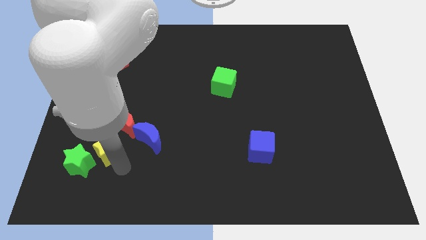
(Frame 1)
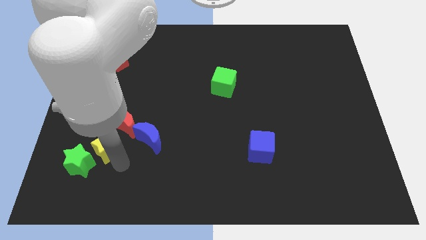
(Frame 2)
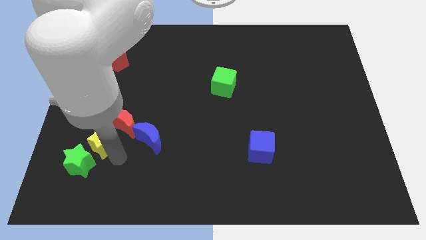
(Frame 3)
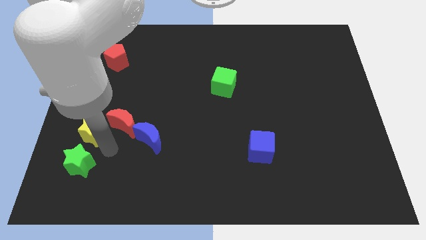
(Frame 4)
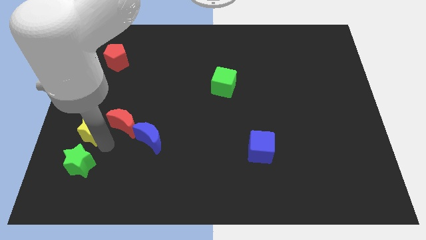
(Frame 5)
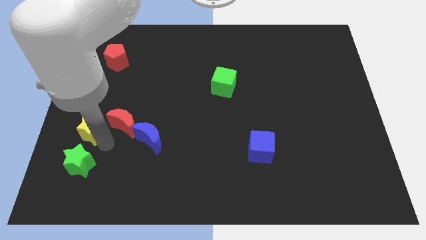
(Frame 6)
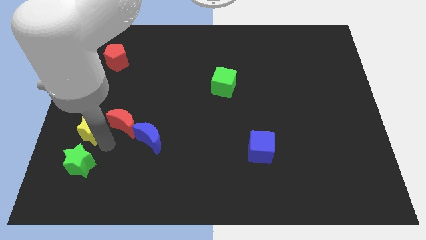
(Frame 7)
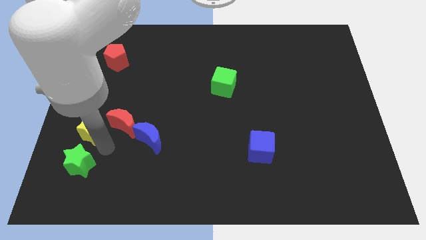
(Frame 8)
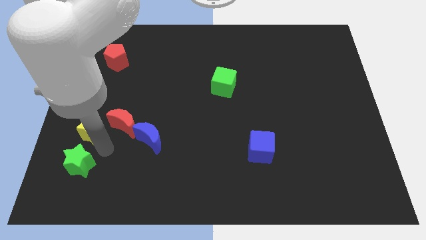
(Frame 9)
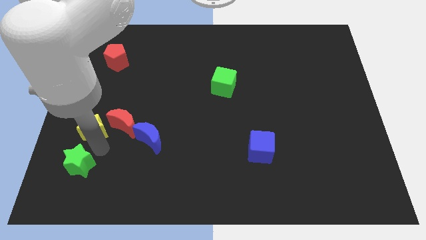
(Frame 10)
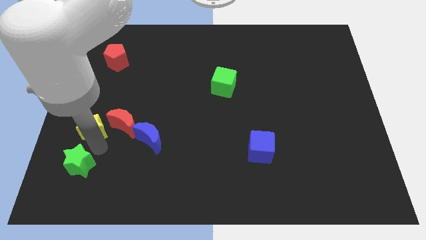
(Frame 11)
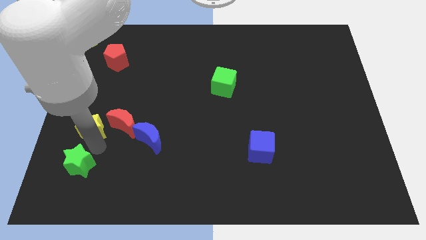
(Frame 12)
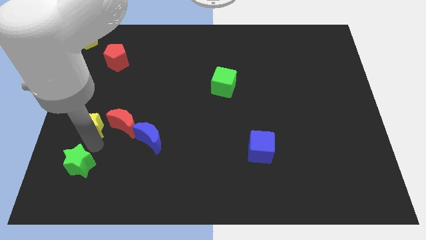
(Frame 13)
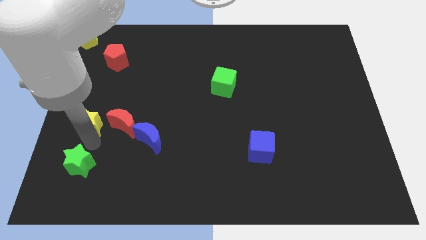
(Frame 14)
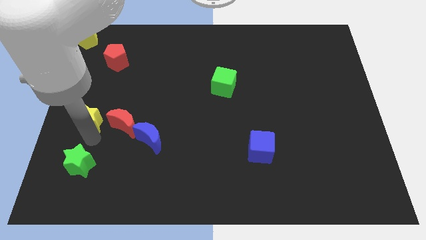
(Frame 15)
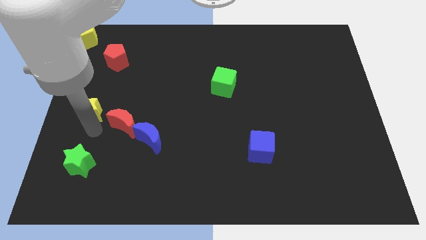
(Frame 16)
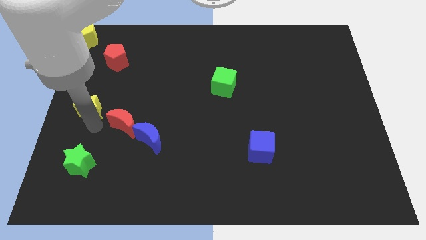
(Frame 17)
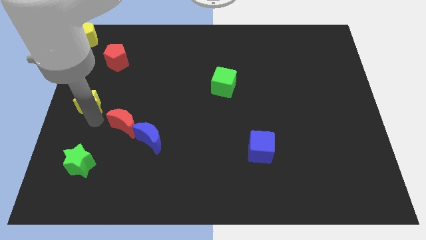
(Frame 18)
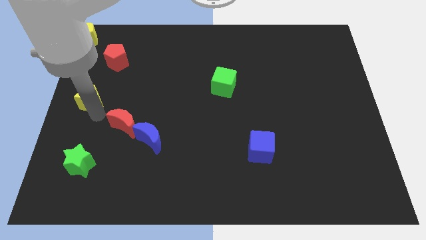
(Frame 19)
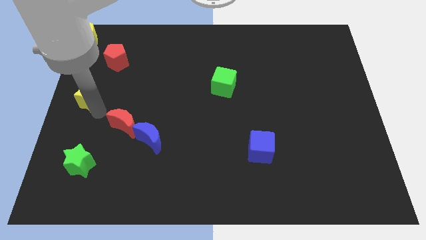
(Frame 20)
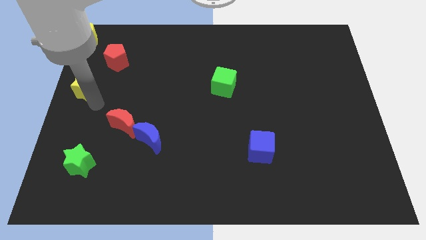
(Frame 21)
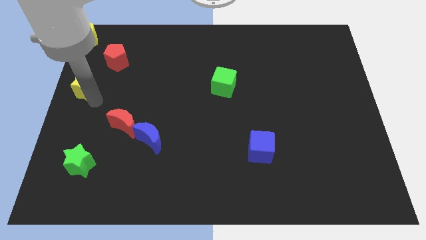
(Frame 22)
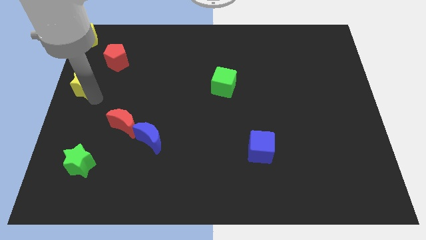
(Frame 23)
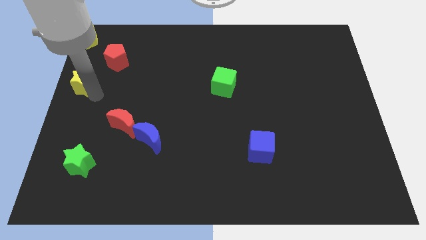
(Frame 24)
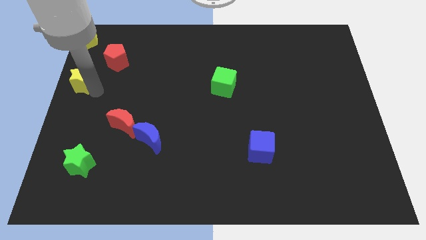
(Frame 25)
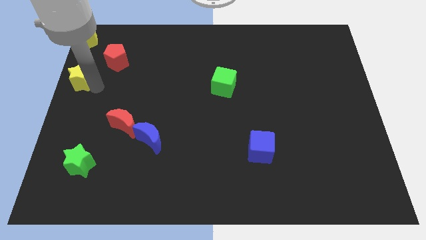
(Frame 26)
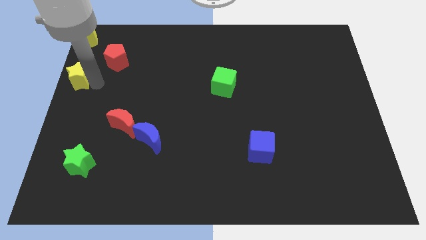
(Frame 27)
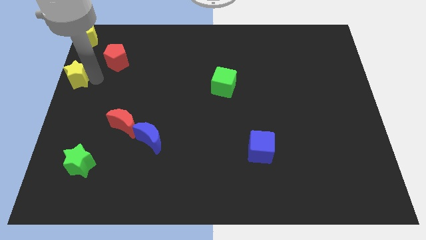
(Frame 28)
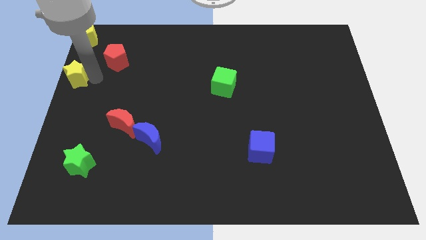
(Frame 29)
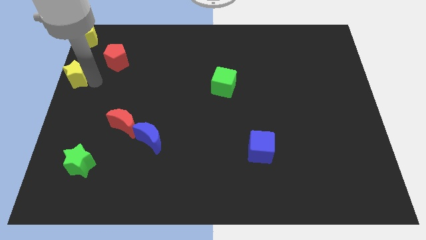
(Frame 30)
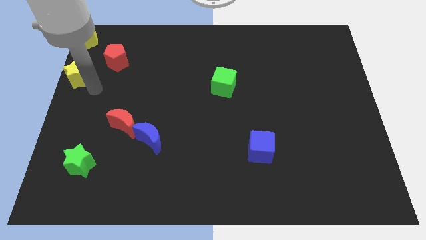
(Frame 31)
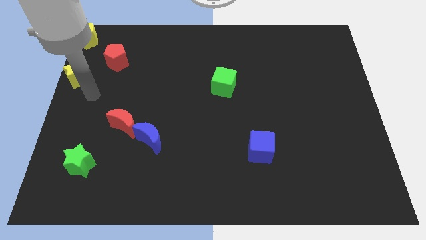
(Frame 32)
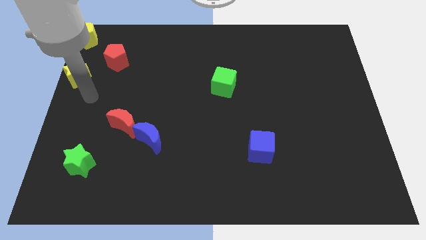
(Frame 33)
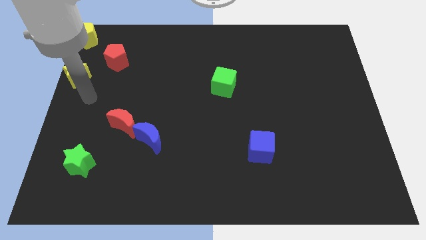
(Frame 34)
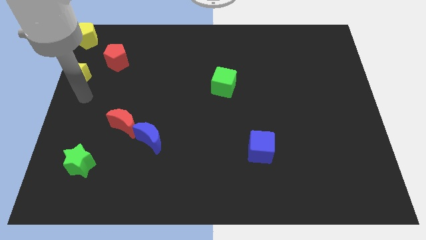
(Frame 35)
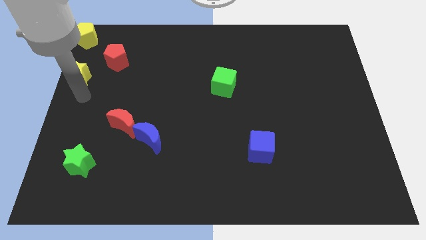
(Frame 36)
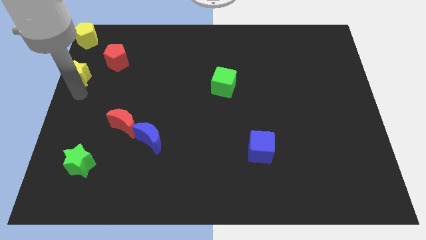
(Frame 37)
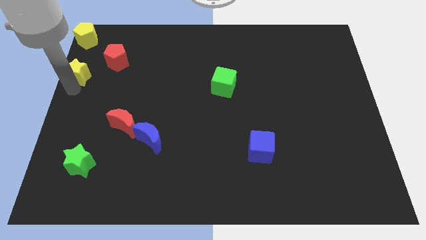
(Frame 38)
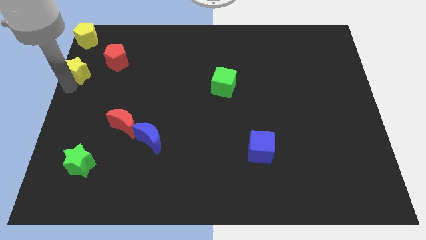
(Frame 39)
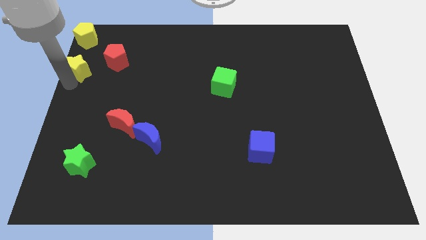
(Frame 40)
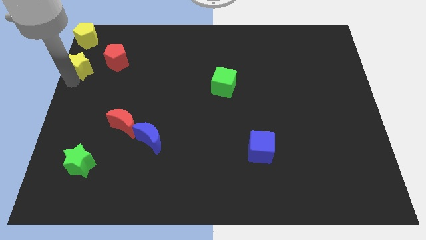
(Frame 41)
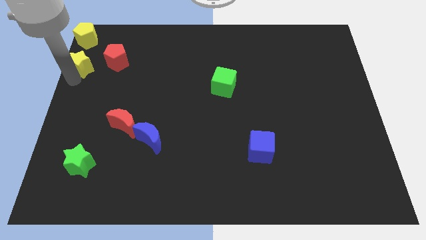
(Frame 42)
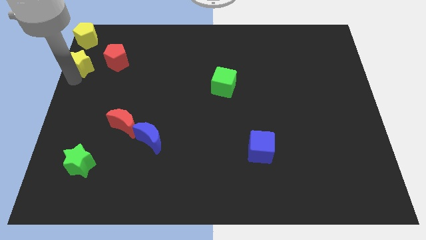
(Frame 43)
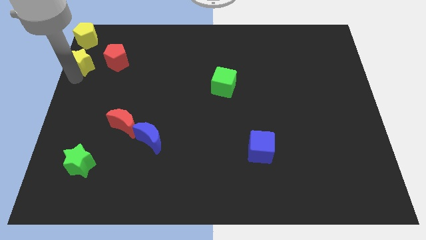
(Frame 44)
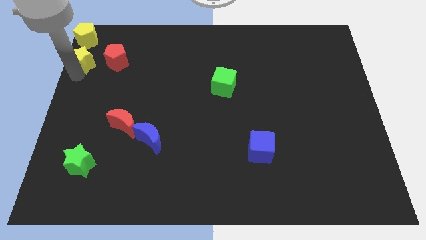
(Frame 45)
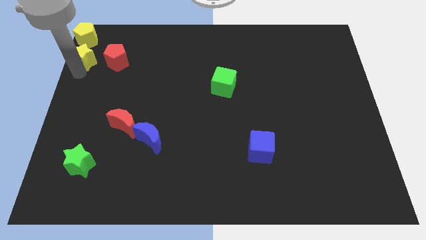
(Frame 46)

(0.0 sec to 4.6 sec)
put the yellow star to the left side of the red pentagon

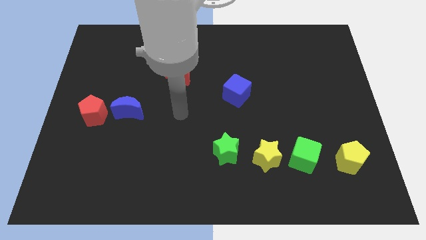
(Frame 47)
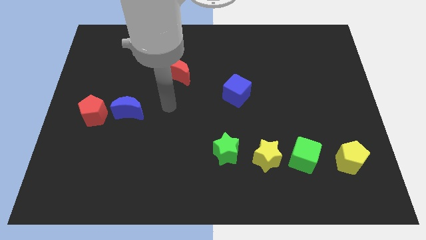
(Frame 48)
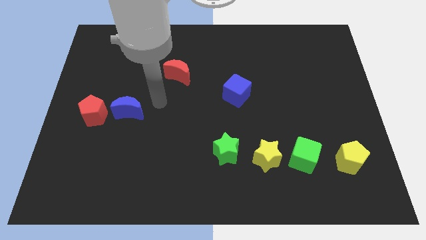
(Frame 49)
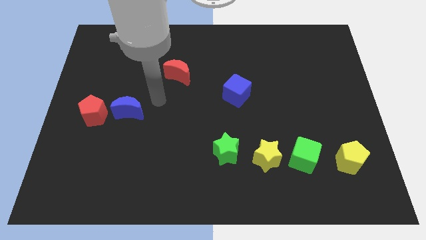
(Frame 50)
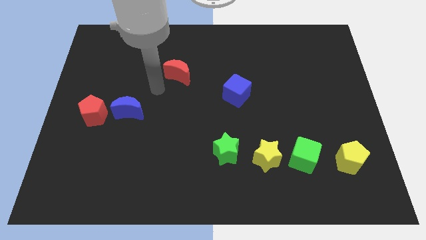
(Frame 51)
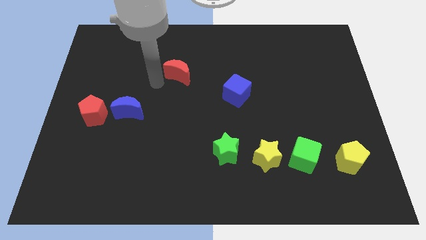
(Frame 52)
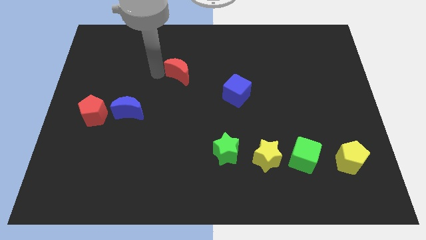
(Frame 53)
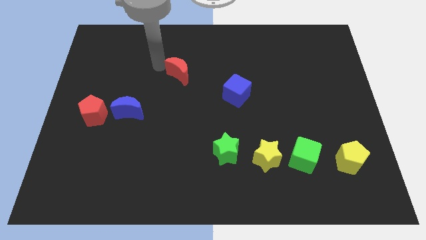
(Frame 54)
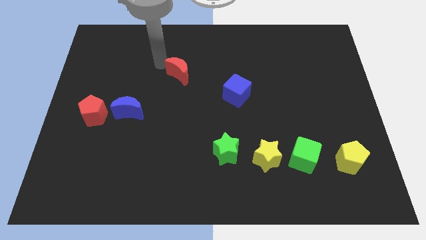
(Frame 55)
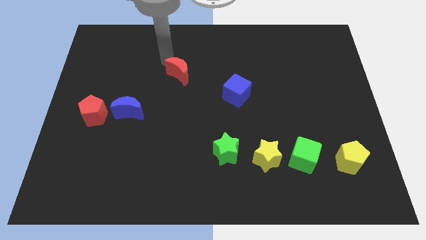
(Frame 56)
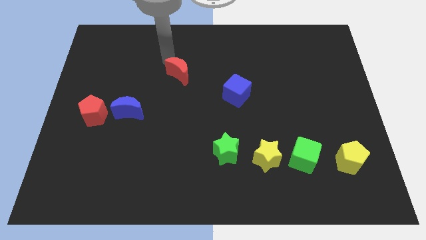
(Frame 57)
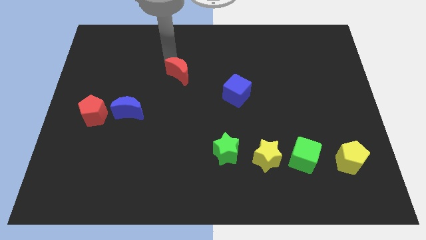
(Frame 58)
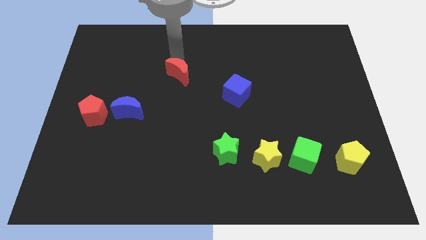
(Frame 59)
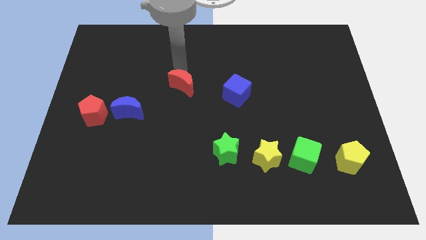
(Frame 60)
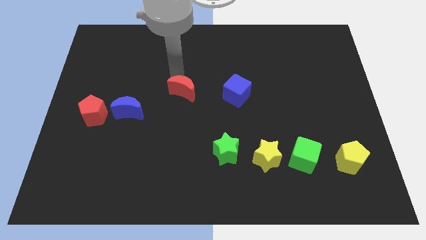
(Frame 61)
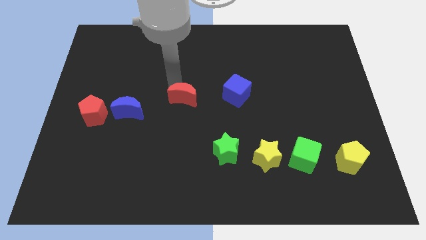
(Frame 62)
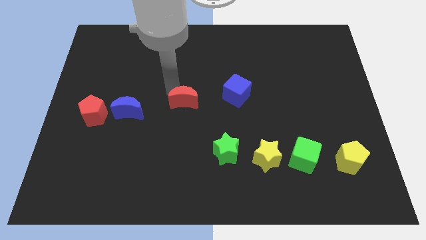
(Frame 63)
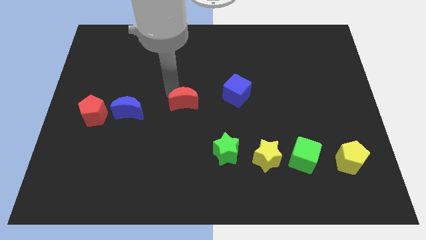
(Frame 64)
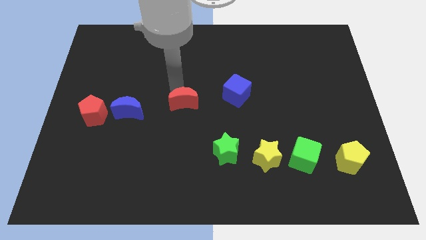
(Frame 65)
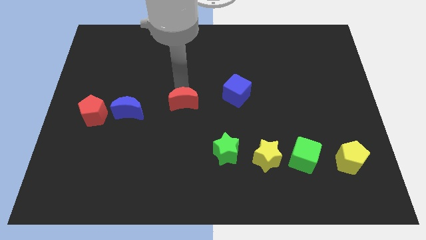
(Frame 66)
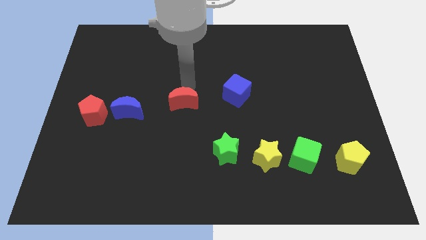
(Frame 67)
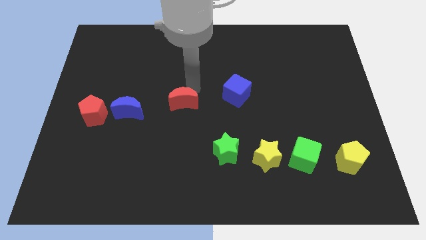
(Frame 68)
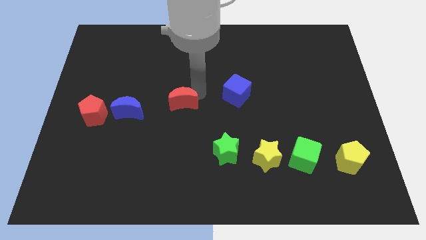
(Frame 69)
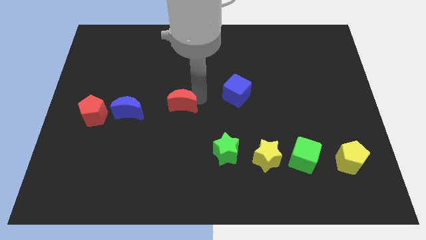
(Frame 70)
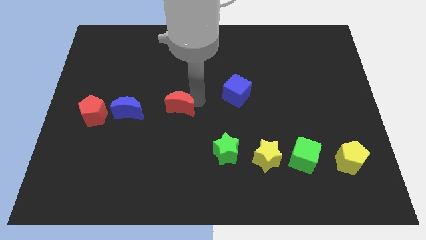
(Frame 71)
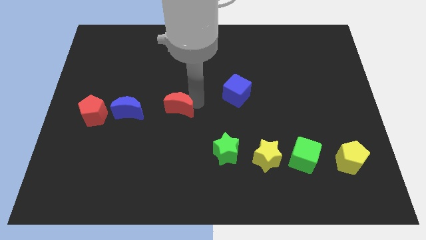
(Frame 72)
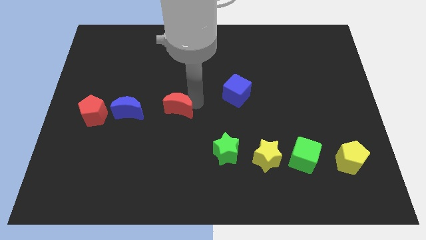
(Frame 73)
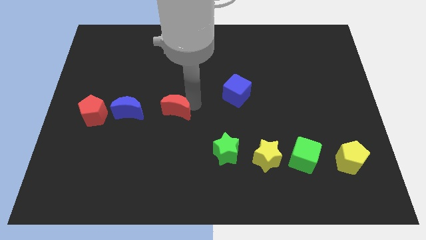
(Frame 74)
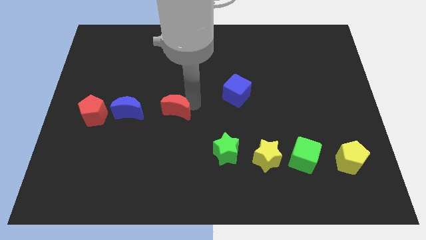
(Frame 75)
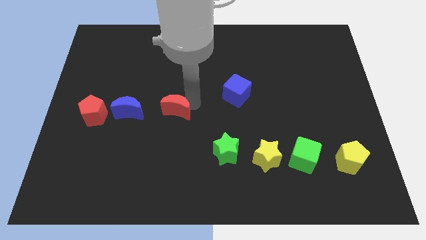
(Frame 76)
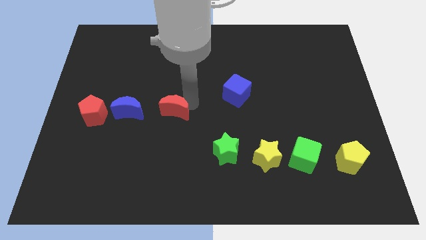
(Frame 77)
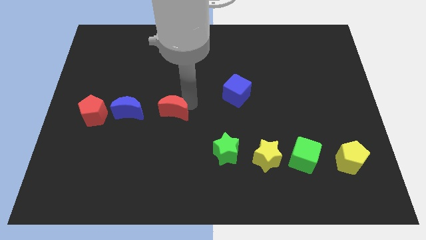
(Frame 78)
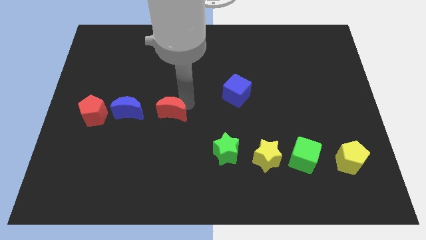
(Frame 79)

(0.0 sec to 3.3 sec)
push the red crescent horizontally to the right of the blue crescent

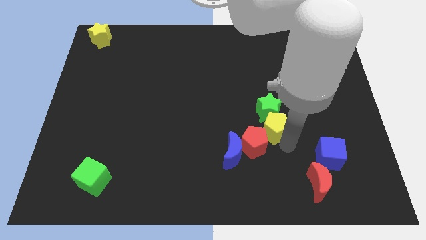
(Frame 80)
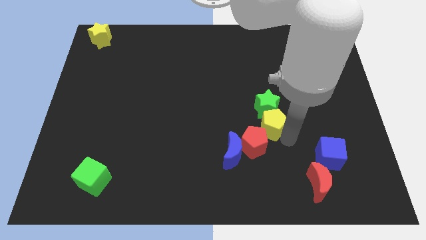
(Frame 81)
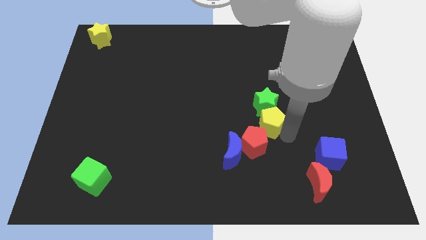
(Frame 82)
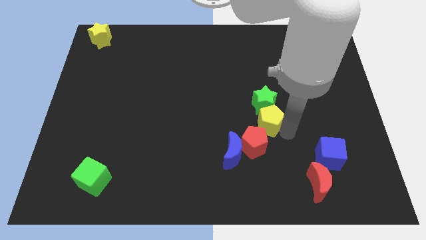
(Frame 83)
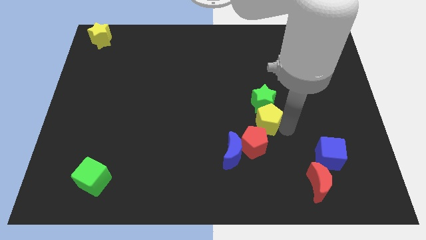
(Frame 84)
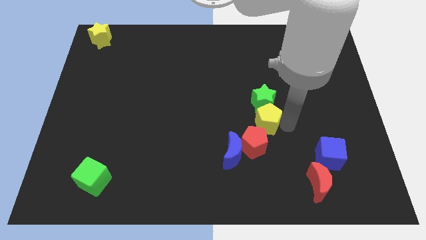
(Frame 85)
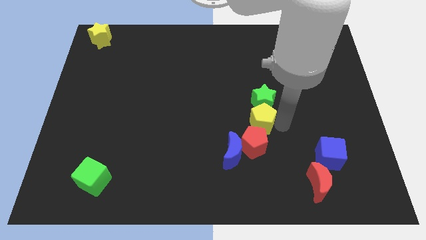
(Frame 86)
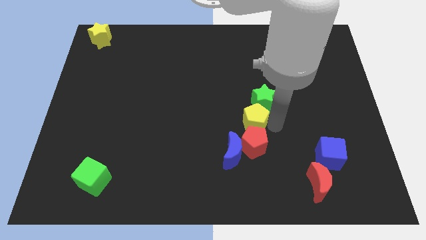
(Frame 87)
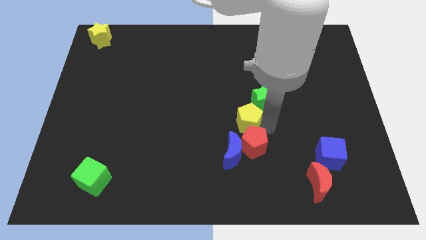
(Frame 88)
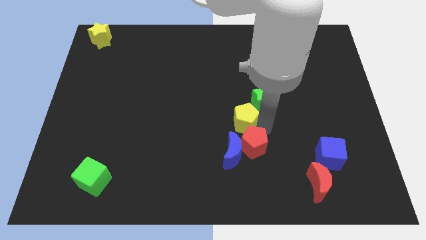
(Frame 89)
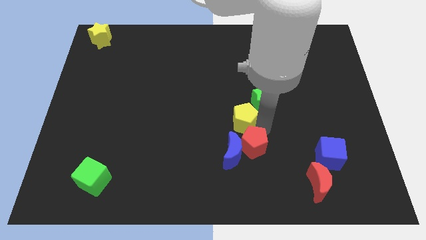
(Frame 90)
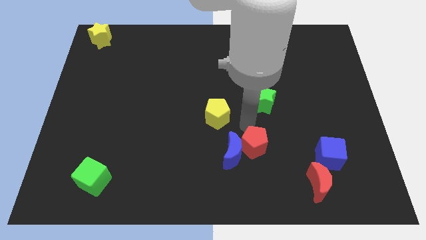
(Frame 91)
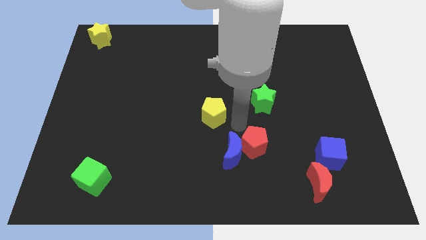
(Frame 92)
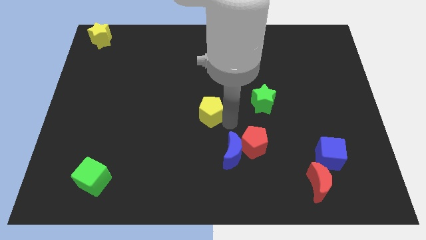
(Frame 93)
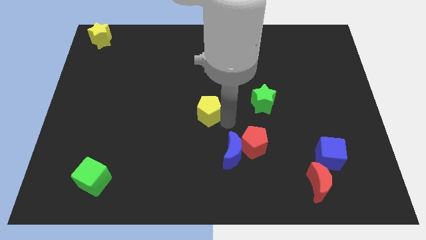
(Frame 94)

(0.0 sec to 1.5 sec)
move the yellow pentagon diagonal to the blue moon
